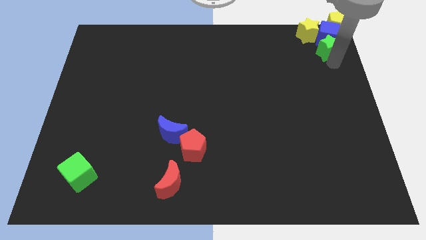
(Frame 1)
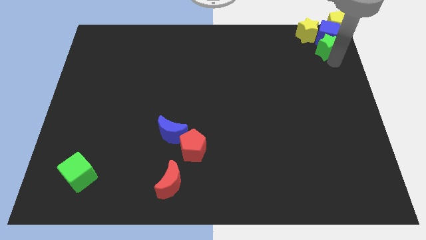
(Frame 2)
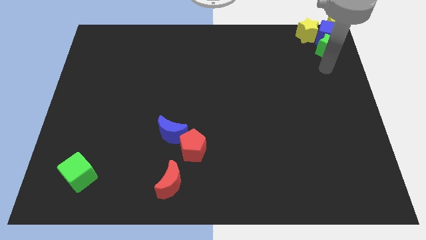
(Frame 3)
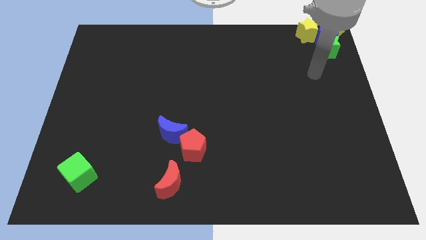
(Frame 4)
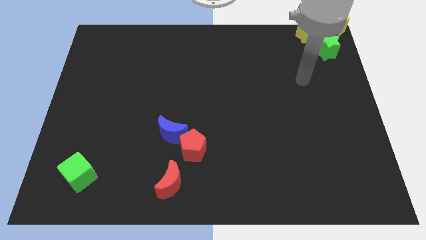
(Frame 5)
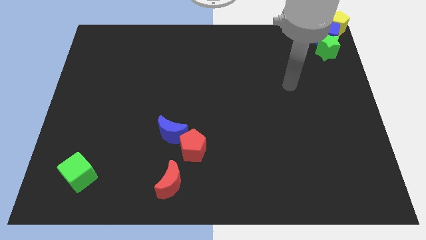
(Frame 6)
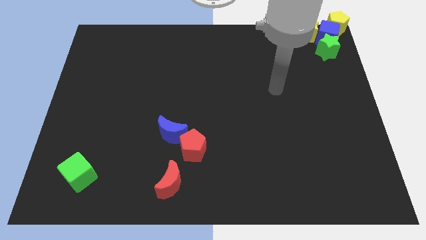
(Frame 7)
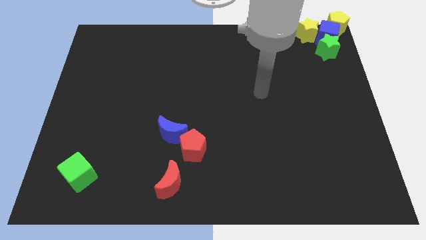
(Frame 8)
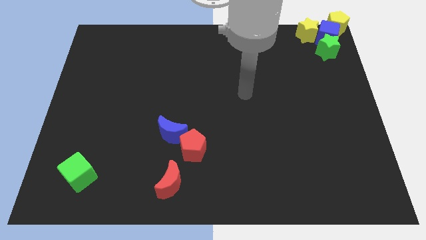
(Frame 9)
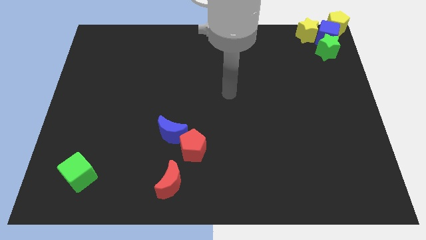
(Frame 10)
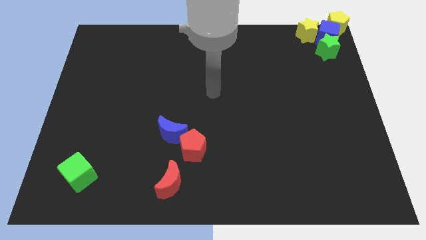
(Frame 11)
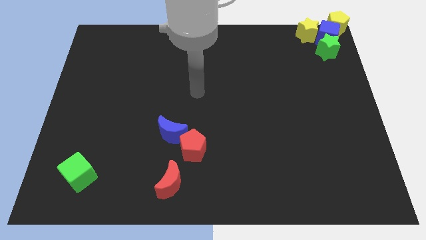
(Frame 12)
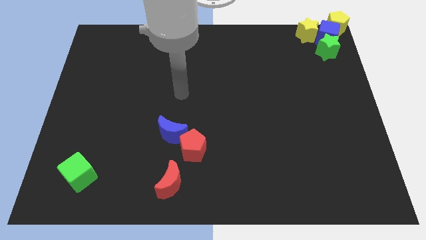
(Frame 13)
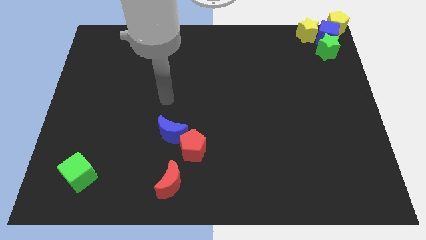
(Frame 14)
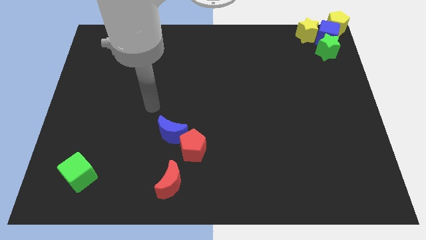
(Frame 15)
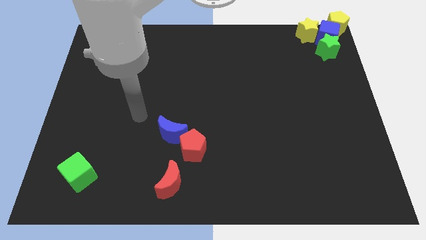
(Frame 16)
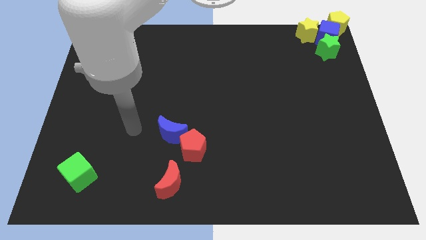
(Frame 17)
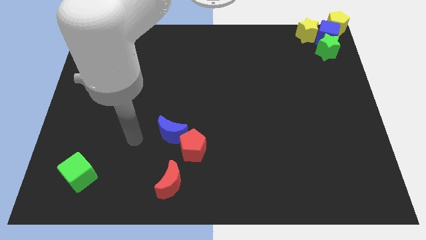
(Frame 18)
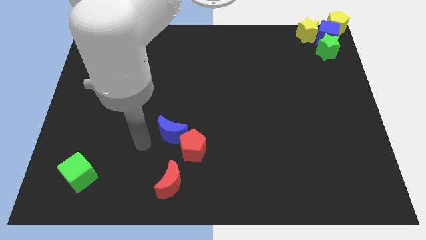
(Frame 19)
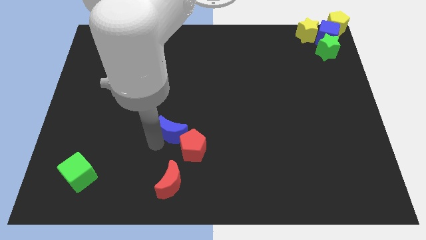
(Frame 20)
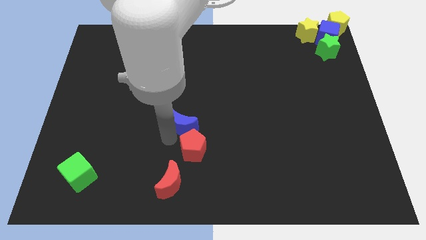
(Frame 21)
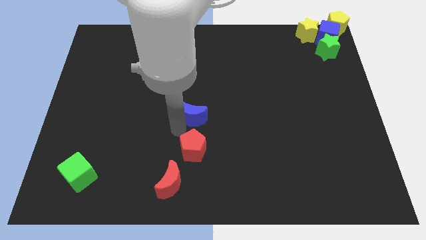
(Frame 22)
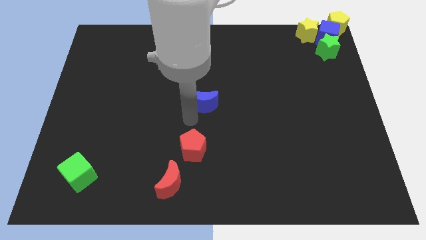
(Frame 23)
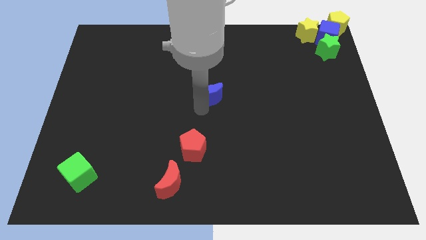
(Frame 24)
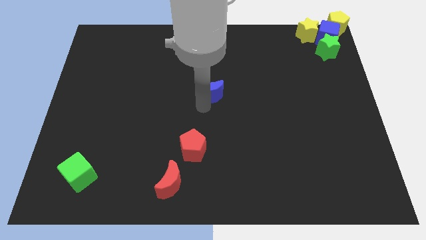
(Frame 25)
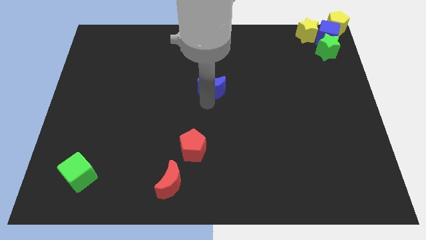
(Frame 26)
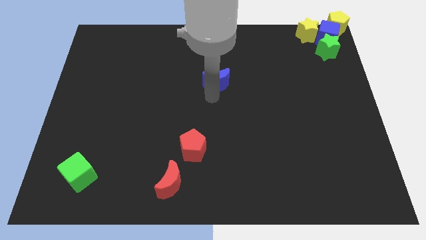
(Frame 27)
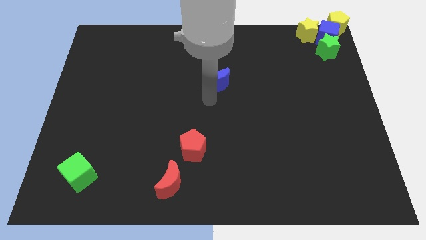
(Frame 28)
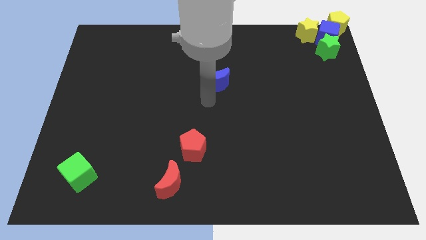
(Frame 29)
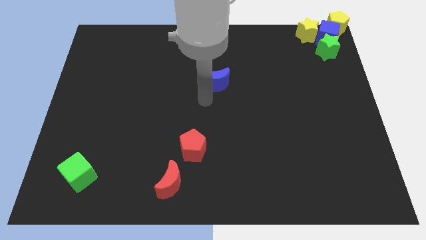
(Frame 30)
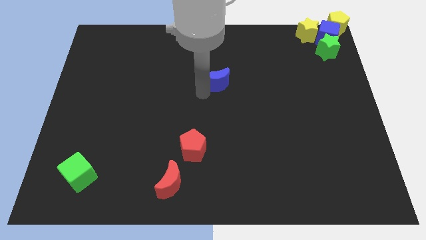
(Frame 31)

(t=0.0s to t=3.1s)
place blue crescent at center

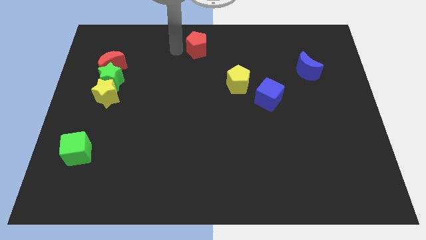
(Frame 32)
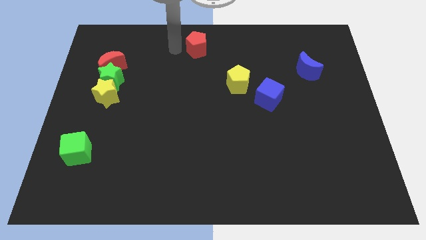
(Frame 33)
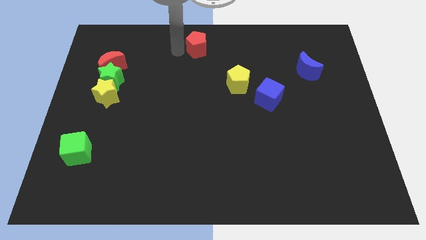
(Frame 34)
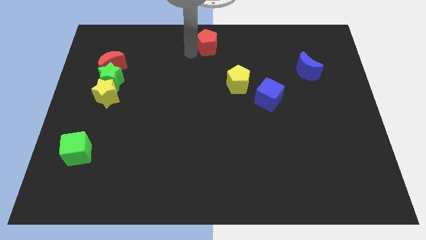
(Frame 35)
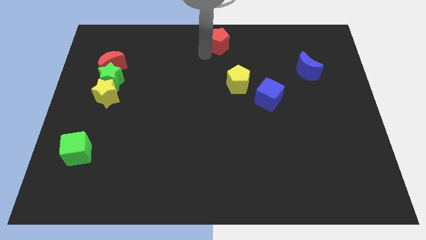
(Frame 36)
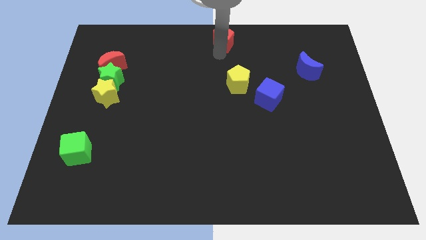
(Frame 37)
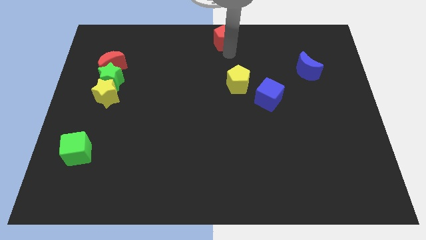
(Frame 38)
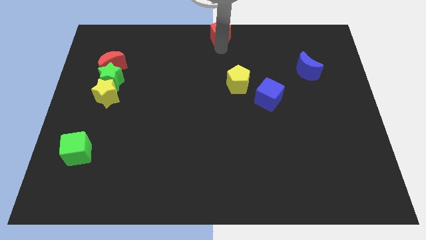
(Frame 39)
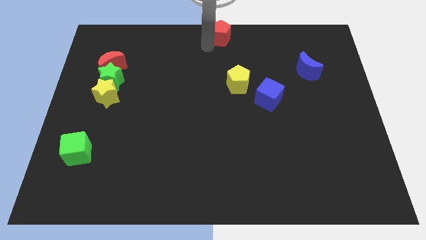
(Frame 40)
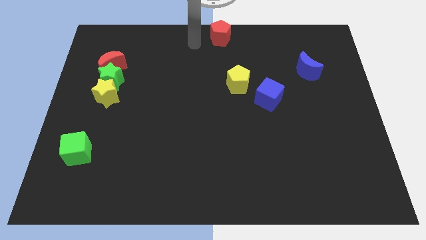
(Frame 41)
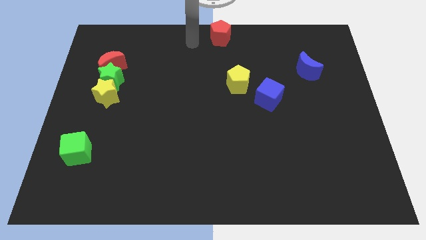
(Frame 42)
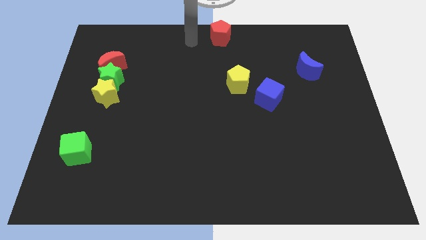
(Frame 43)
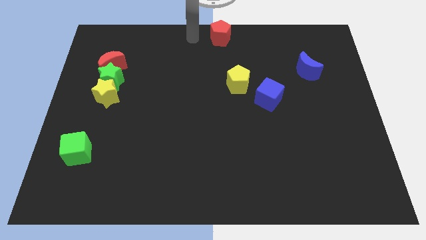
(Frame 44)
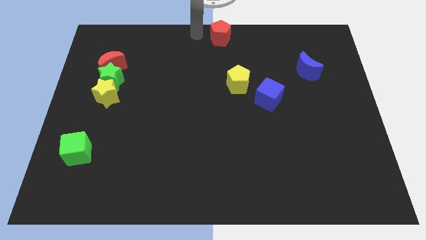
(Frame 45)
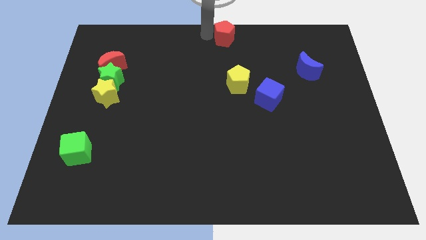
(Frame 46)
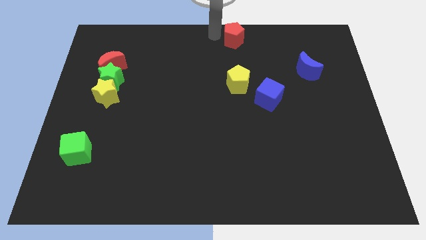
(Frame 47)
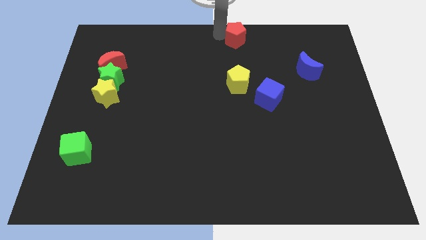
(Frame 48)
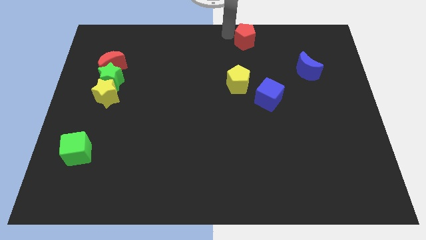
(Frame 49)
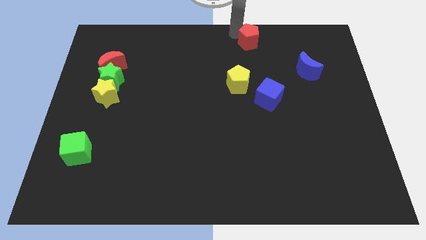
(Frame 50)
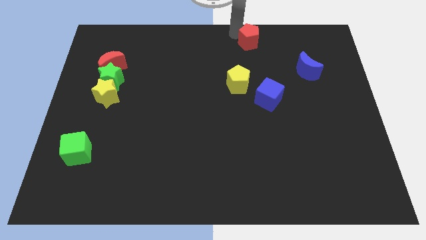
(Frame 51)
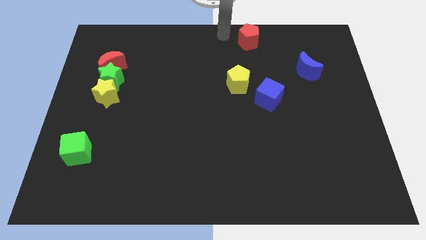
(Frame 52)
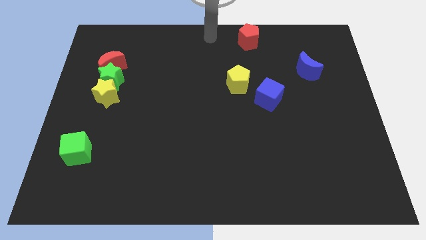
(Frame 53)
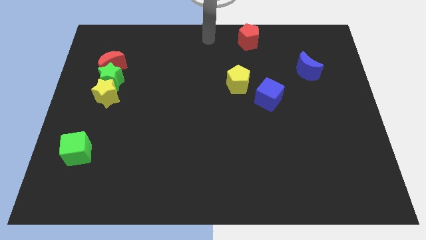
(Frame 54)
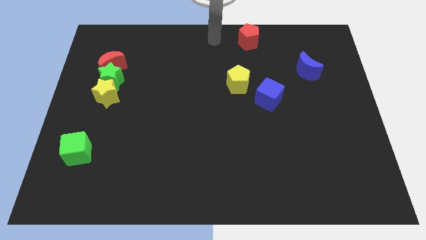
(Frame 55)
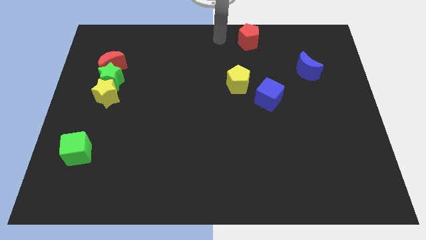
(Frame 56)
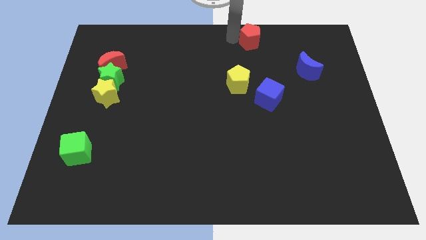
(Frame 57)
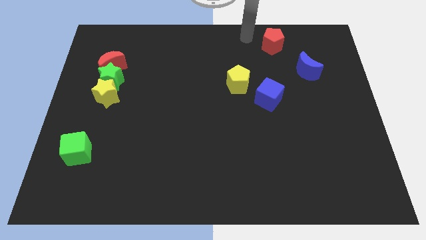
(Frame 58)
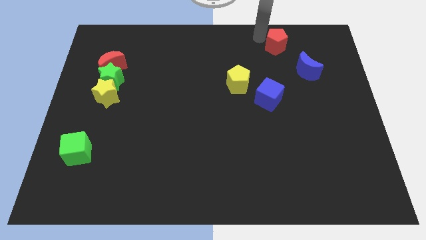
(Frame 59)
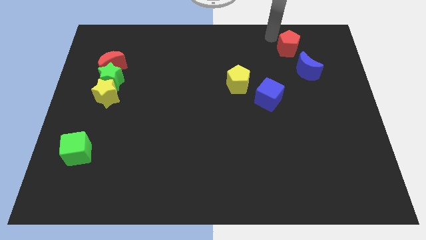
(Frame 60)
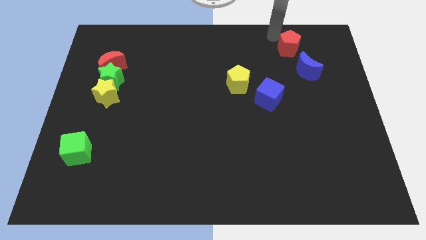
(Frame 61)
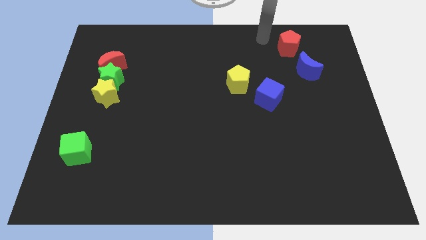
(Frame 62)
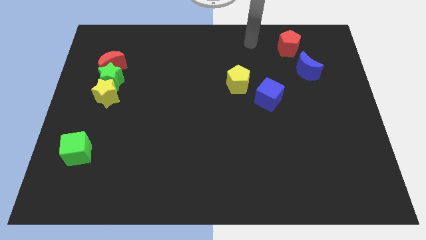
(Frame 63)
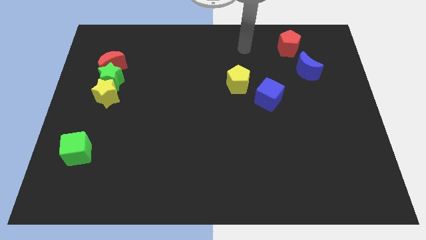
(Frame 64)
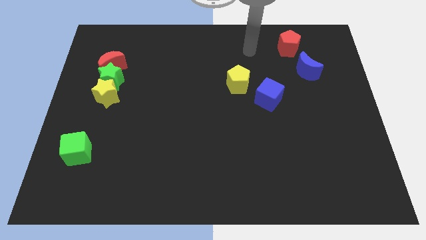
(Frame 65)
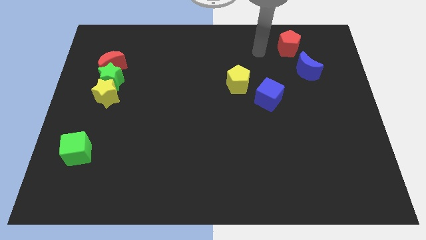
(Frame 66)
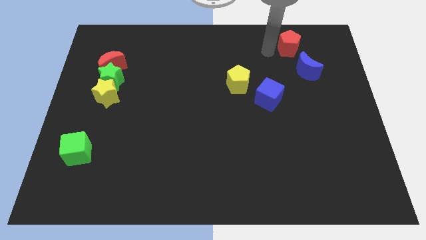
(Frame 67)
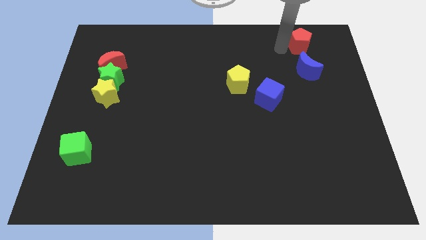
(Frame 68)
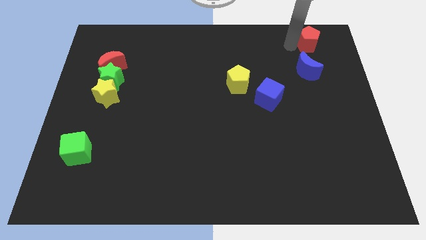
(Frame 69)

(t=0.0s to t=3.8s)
move red pentagon on top of blue crescent

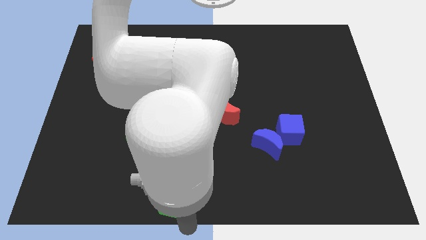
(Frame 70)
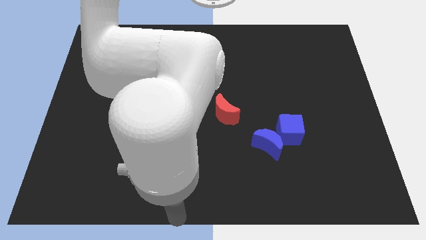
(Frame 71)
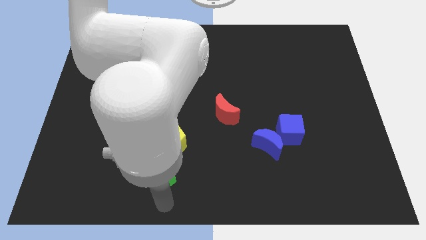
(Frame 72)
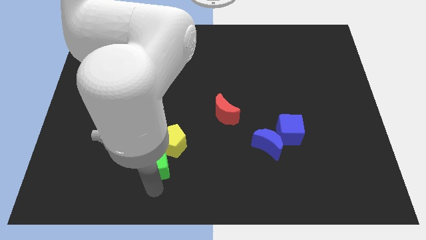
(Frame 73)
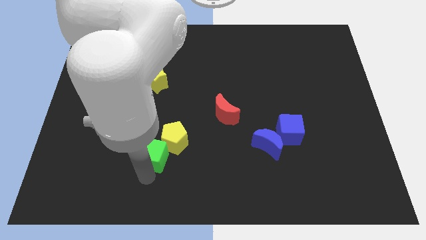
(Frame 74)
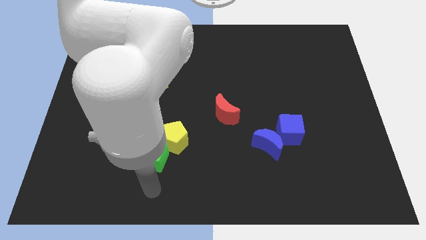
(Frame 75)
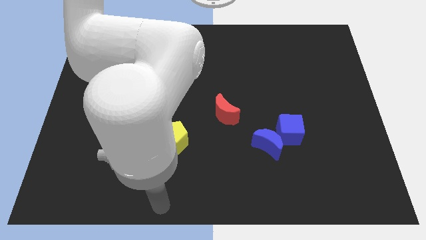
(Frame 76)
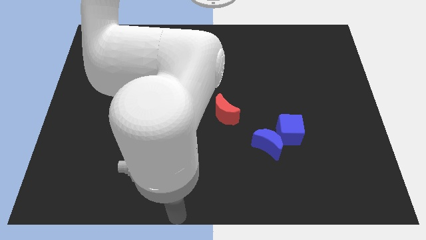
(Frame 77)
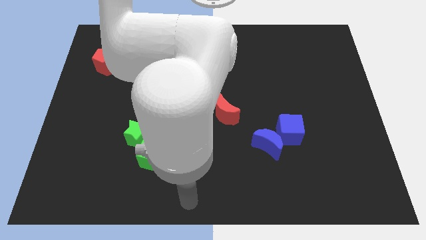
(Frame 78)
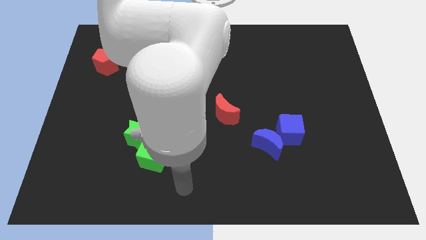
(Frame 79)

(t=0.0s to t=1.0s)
place the green cube below the green star

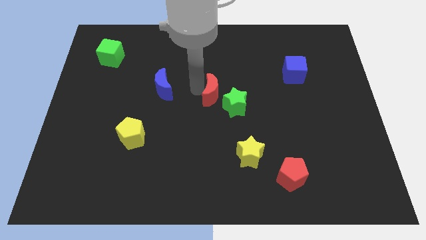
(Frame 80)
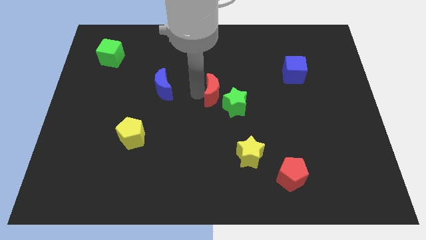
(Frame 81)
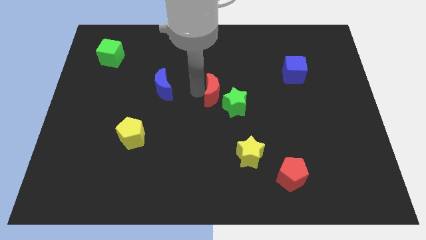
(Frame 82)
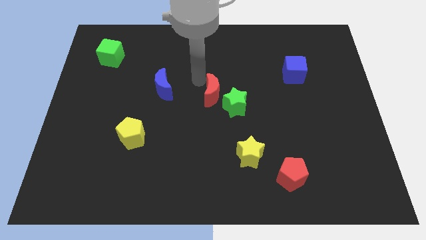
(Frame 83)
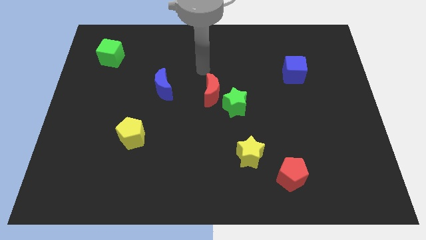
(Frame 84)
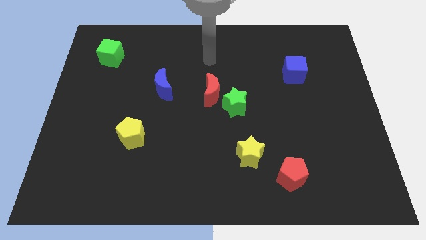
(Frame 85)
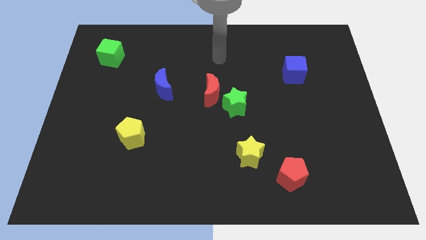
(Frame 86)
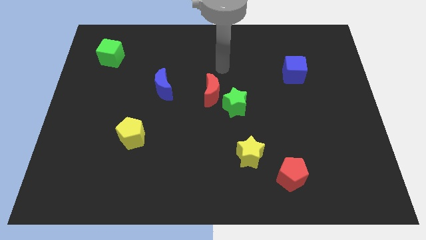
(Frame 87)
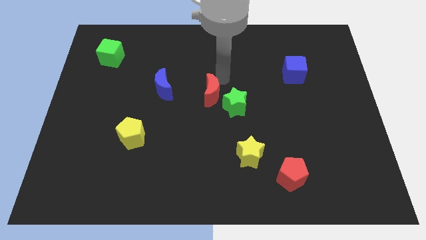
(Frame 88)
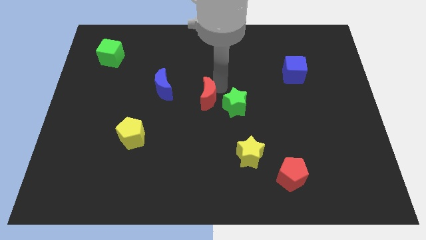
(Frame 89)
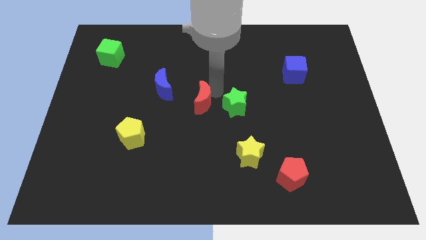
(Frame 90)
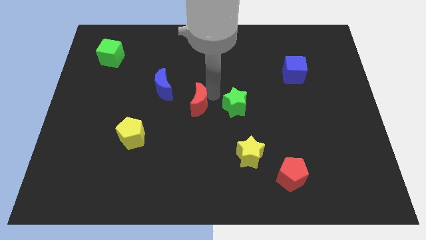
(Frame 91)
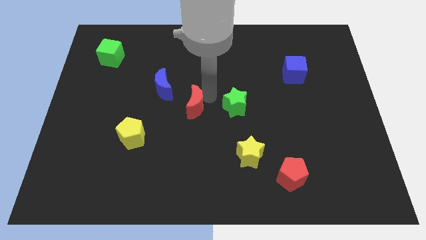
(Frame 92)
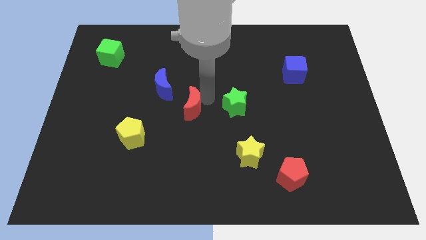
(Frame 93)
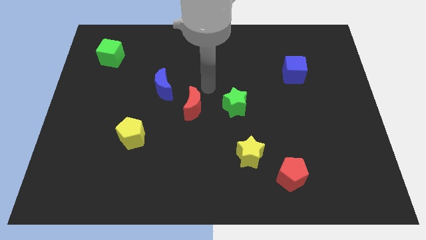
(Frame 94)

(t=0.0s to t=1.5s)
slide the red moon diagonally bottom right to the blue moon
